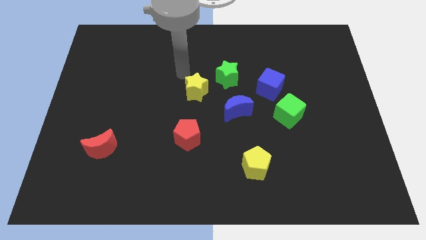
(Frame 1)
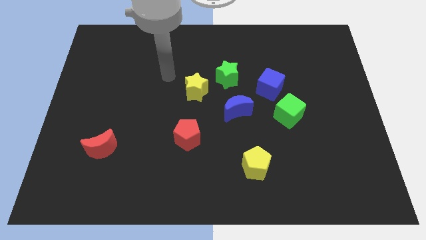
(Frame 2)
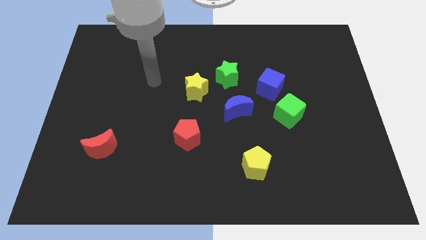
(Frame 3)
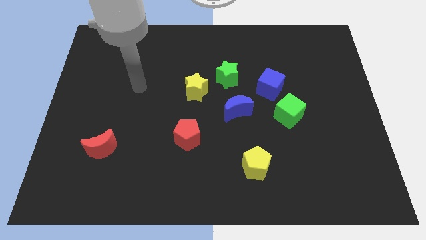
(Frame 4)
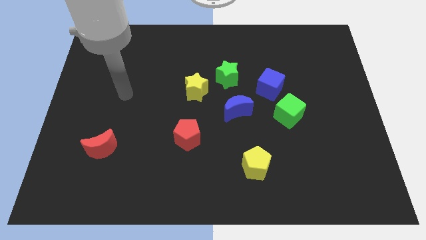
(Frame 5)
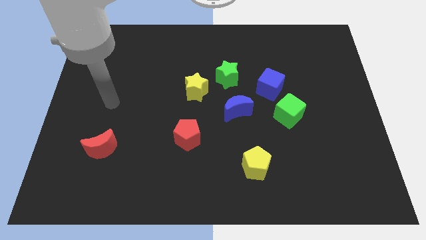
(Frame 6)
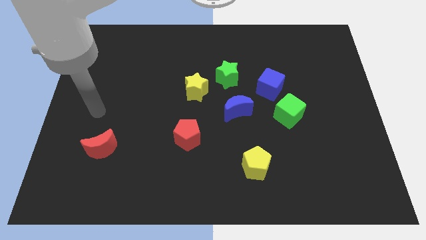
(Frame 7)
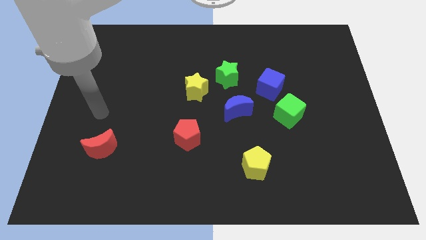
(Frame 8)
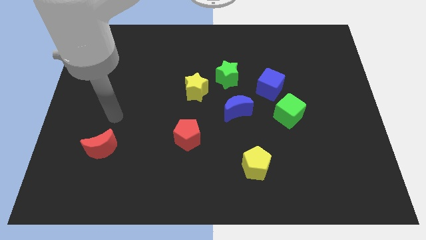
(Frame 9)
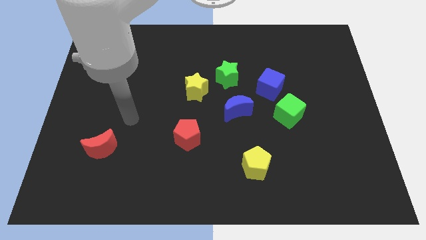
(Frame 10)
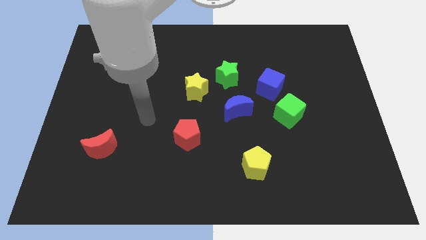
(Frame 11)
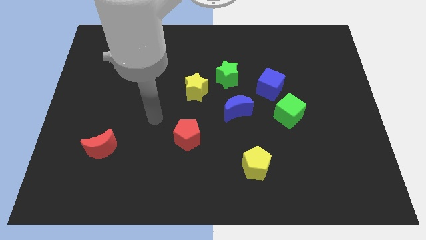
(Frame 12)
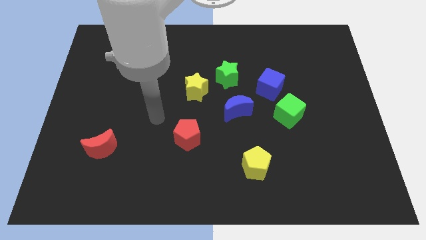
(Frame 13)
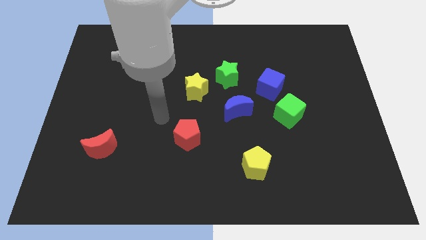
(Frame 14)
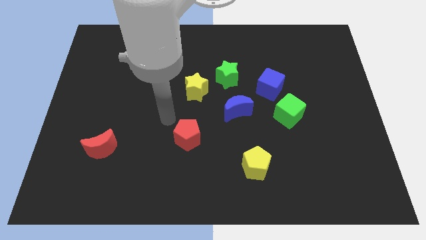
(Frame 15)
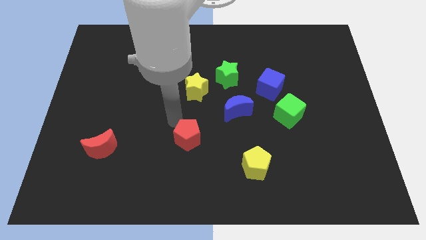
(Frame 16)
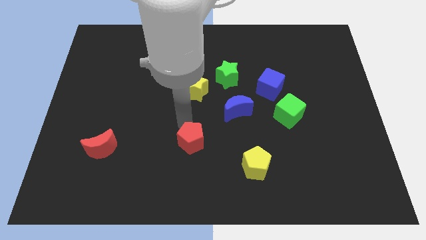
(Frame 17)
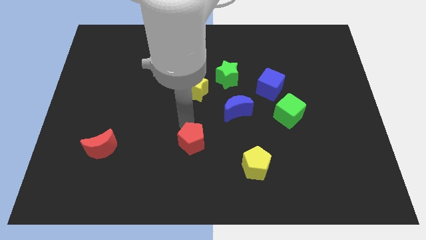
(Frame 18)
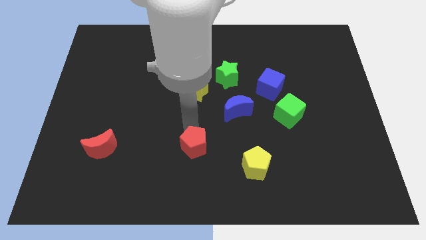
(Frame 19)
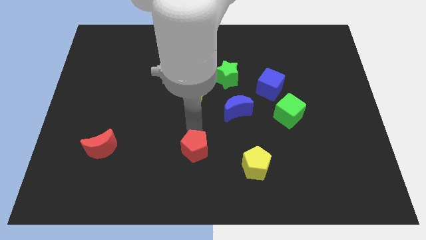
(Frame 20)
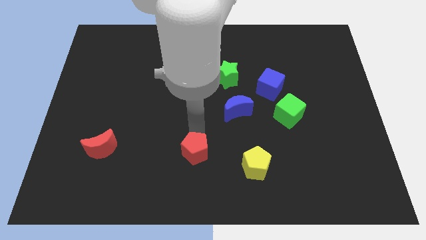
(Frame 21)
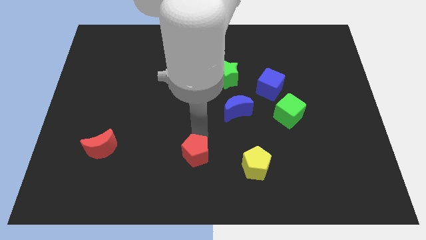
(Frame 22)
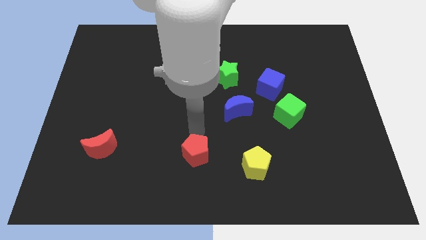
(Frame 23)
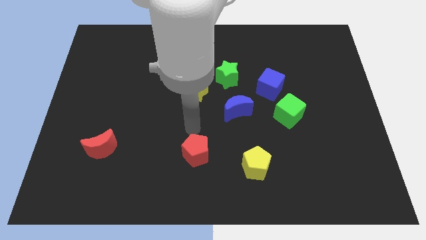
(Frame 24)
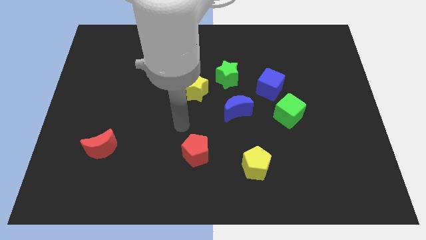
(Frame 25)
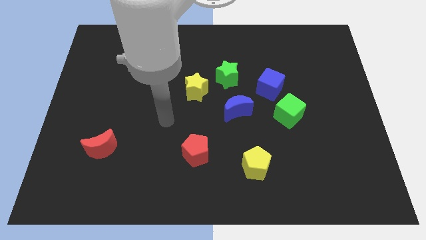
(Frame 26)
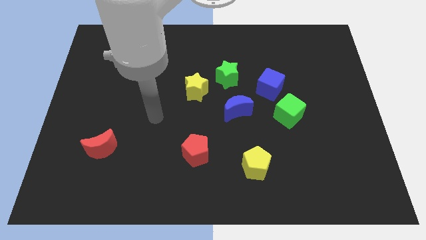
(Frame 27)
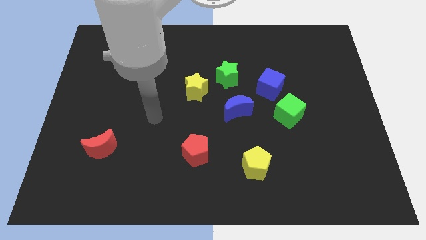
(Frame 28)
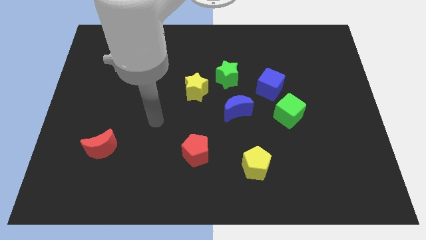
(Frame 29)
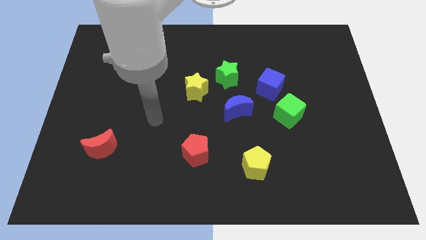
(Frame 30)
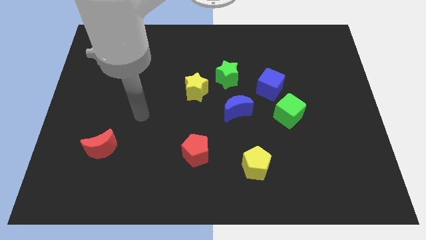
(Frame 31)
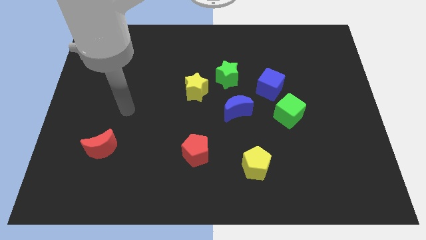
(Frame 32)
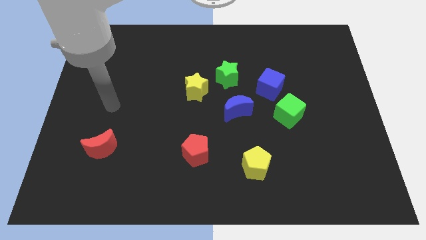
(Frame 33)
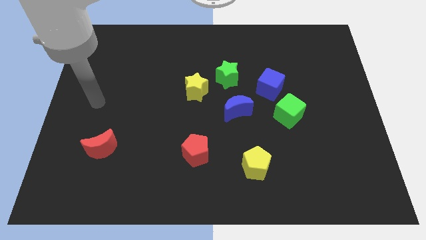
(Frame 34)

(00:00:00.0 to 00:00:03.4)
move the red pentagon diagonal to the blue moon

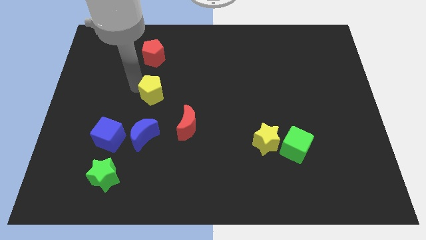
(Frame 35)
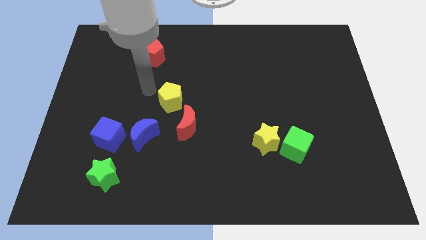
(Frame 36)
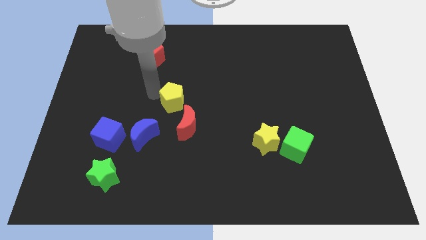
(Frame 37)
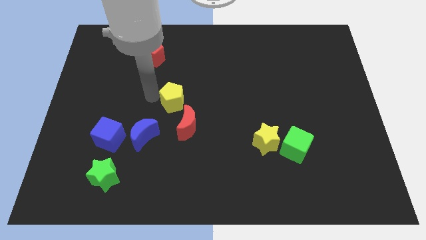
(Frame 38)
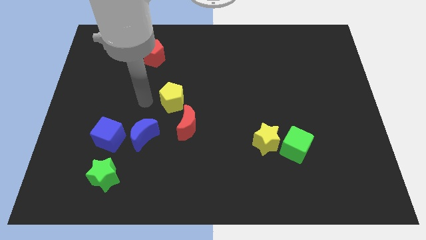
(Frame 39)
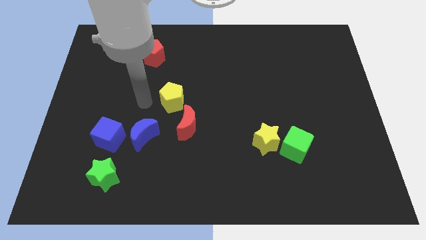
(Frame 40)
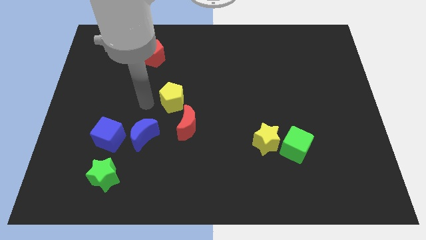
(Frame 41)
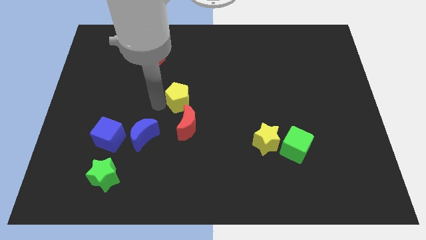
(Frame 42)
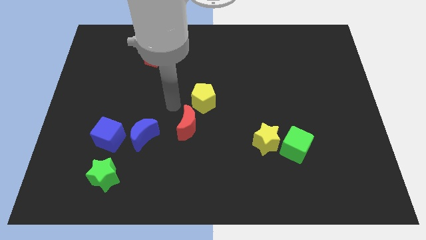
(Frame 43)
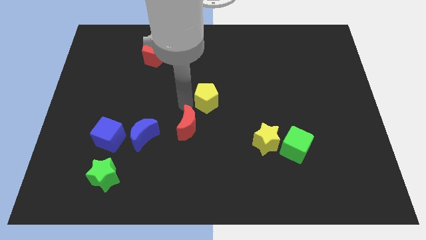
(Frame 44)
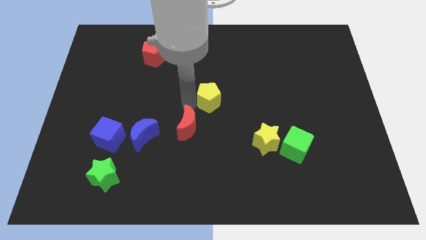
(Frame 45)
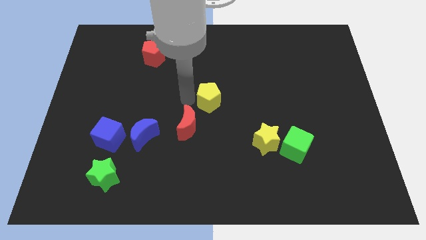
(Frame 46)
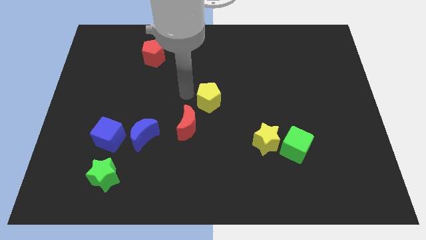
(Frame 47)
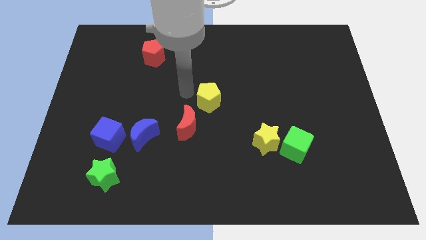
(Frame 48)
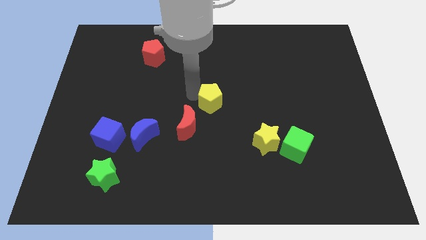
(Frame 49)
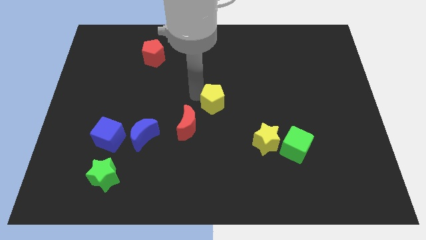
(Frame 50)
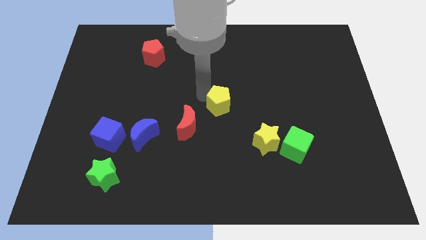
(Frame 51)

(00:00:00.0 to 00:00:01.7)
push the yellow pentagon slightly to the right

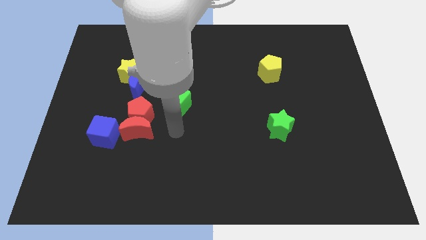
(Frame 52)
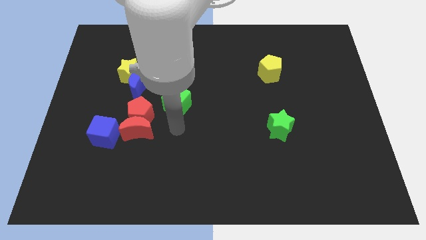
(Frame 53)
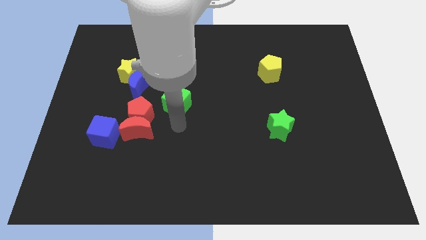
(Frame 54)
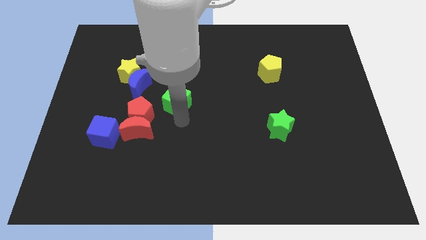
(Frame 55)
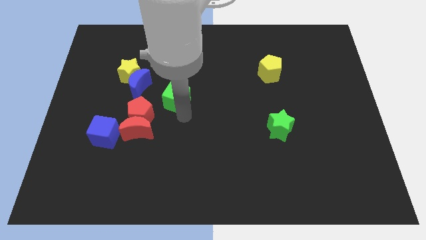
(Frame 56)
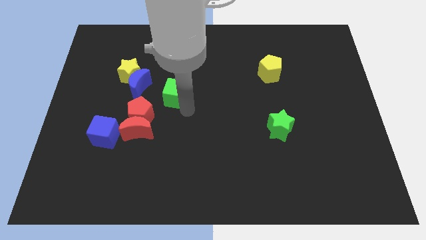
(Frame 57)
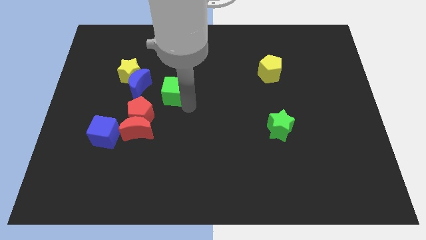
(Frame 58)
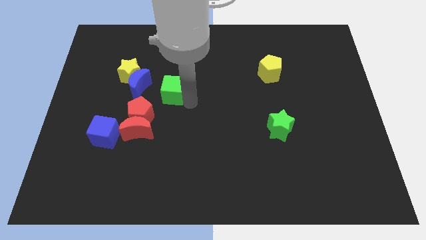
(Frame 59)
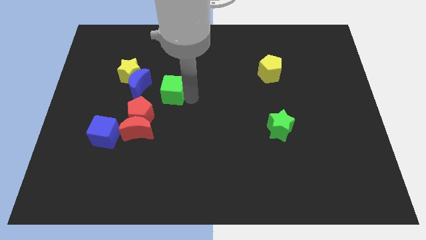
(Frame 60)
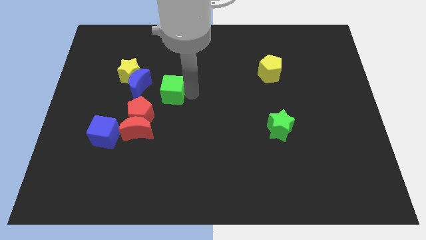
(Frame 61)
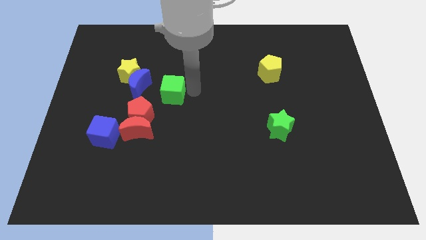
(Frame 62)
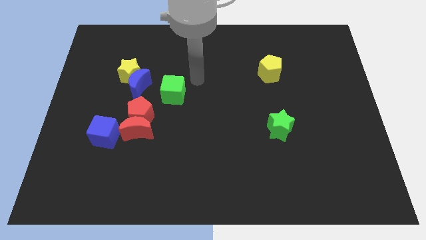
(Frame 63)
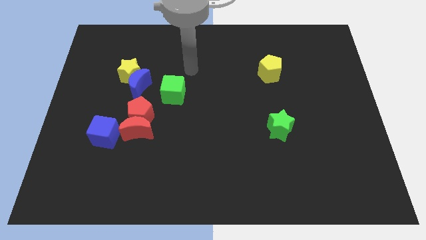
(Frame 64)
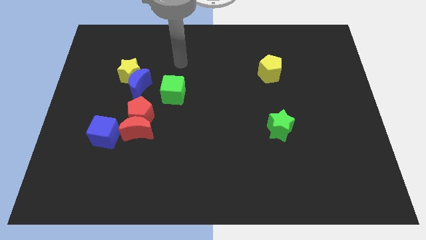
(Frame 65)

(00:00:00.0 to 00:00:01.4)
slide the green cube

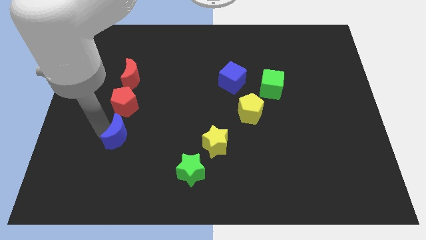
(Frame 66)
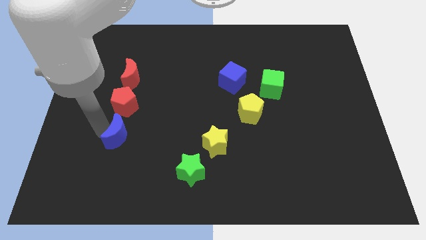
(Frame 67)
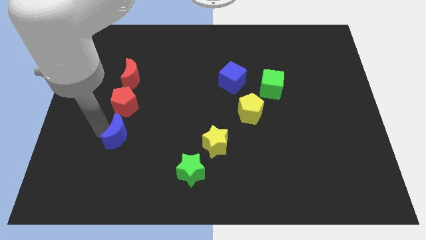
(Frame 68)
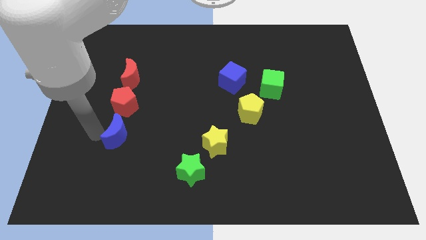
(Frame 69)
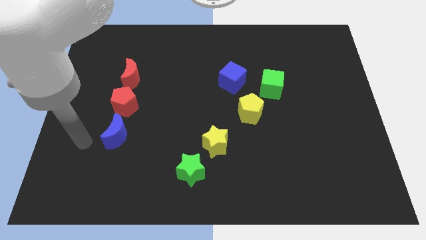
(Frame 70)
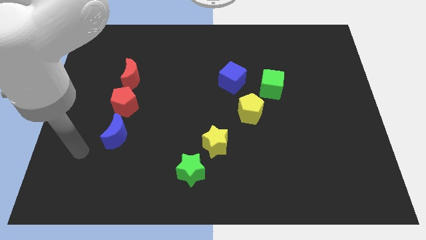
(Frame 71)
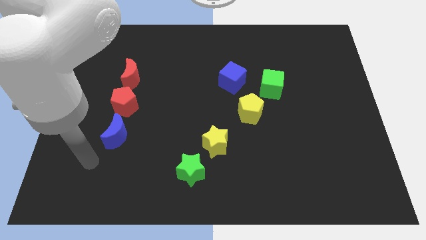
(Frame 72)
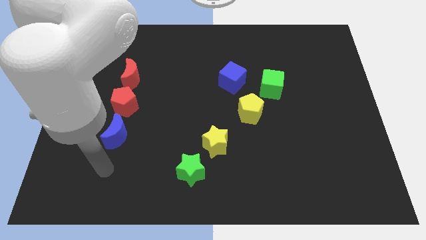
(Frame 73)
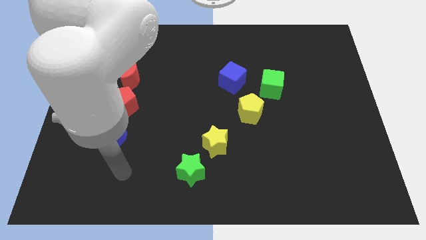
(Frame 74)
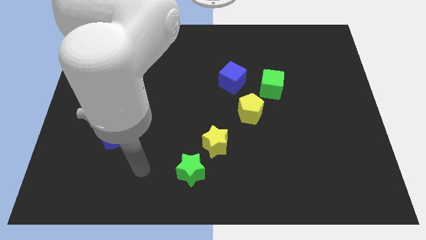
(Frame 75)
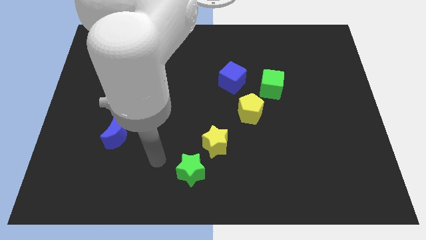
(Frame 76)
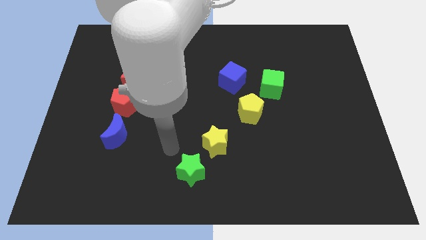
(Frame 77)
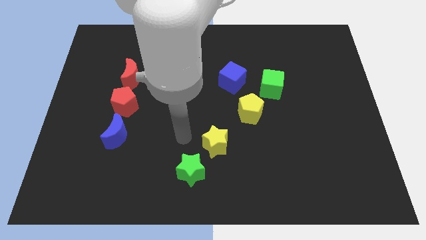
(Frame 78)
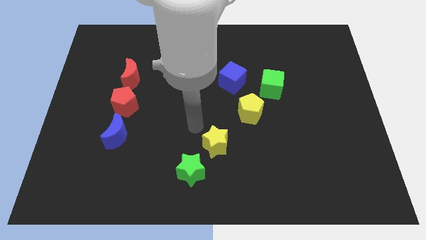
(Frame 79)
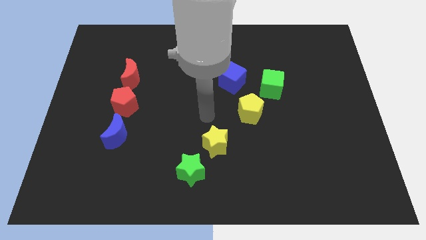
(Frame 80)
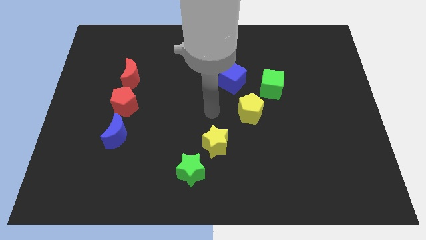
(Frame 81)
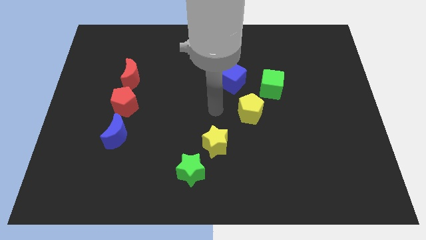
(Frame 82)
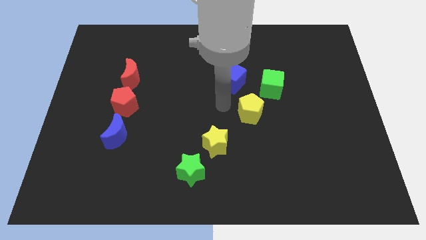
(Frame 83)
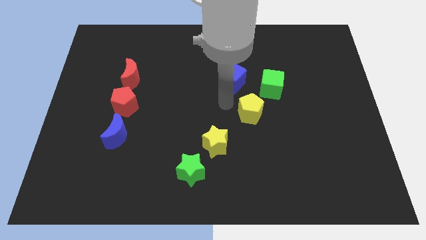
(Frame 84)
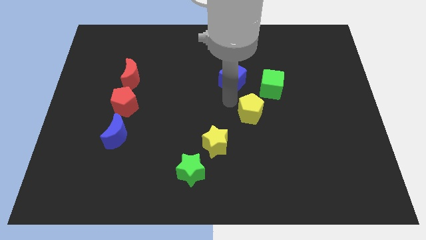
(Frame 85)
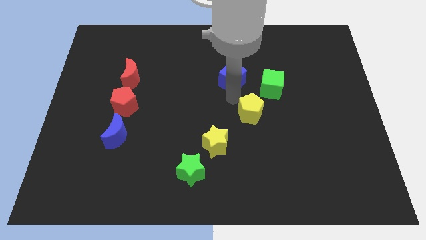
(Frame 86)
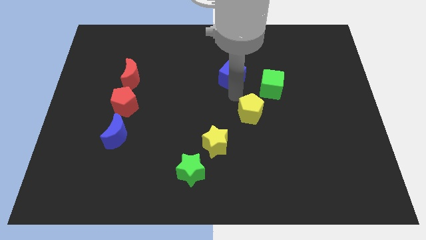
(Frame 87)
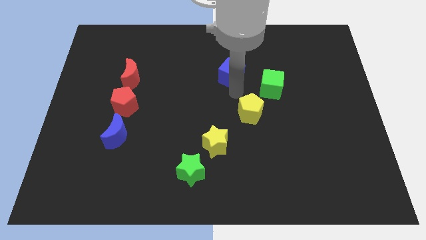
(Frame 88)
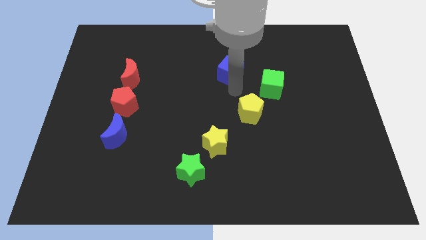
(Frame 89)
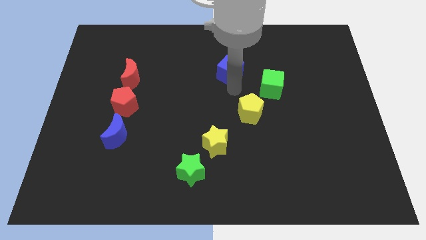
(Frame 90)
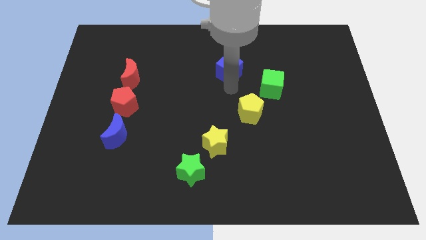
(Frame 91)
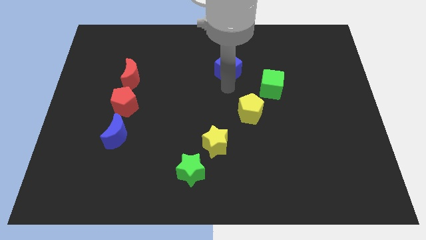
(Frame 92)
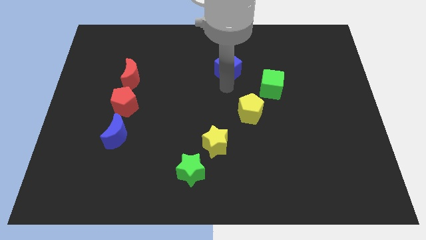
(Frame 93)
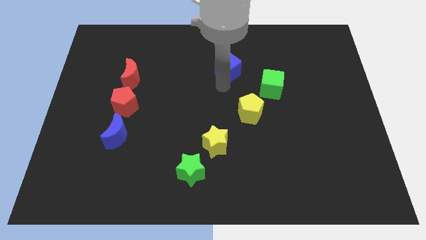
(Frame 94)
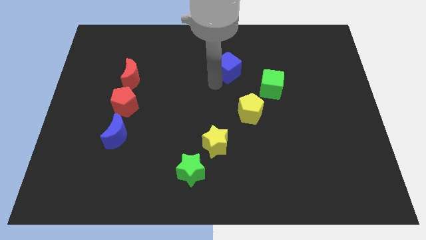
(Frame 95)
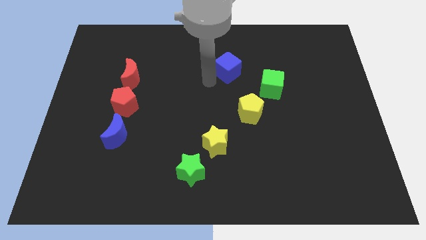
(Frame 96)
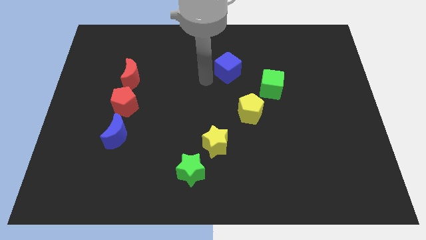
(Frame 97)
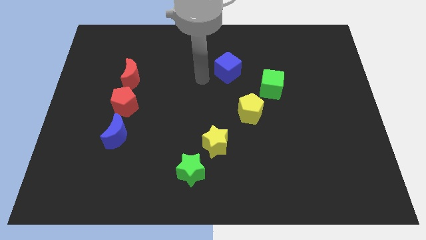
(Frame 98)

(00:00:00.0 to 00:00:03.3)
slightly push the blue cube to the top center
